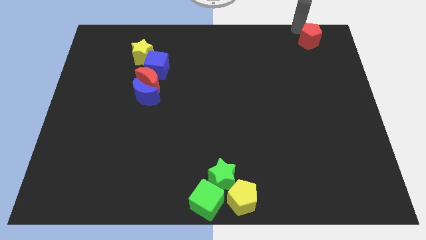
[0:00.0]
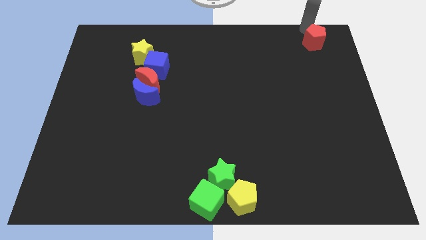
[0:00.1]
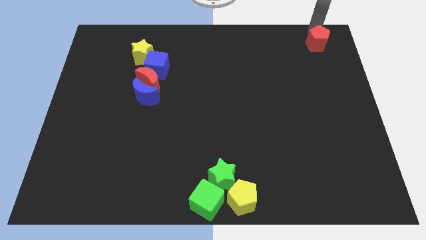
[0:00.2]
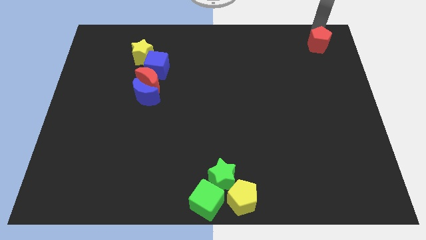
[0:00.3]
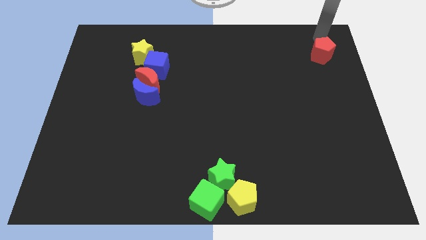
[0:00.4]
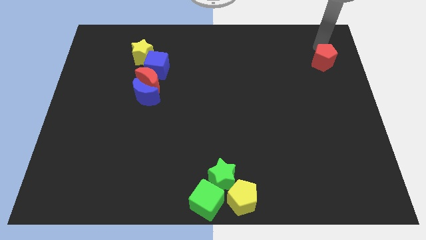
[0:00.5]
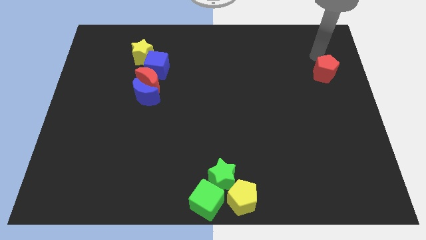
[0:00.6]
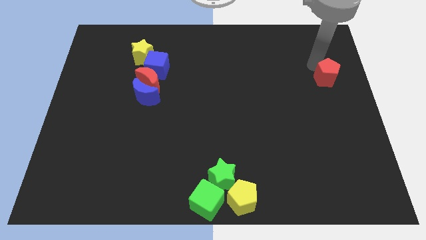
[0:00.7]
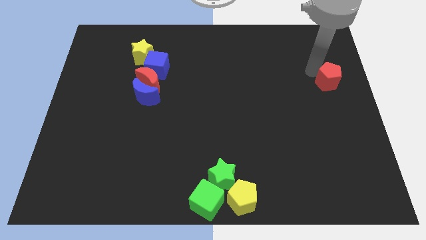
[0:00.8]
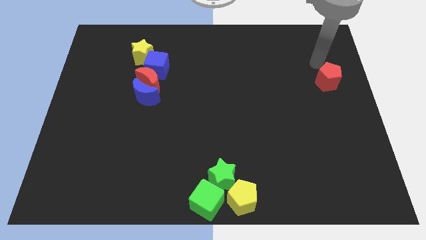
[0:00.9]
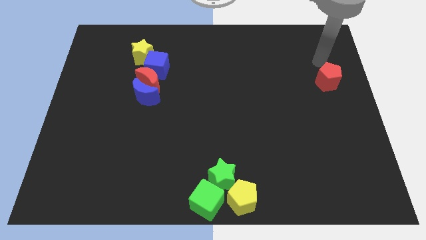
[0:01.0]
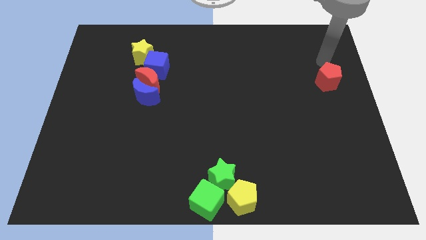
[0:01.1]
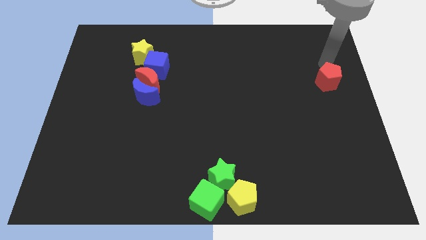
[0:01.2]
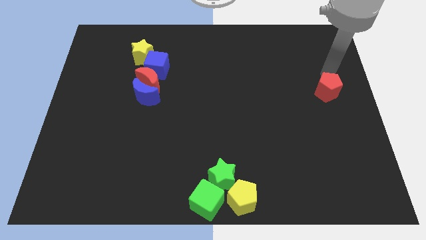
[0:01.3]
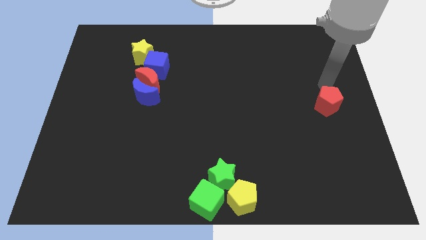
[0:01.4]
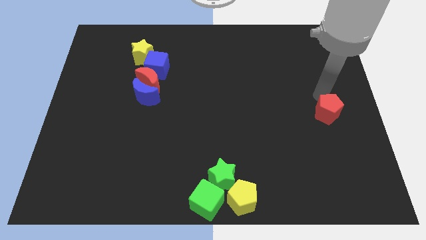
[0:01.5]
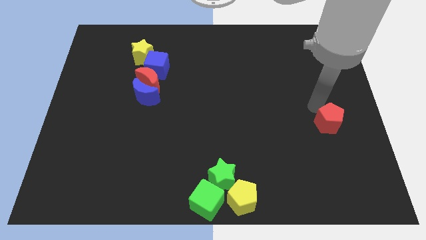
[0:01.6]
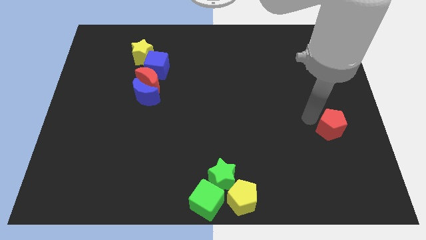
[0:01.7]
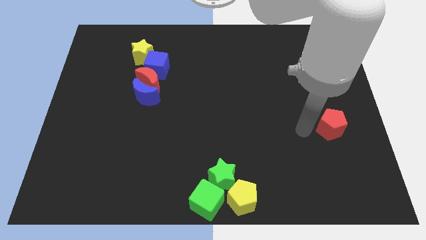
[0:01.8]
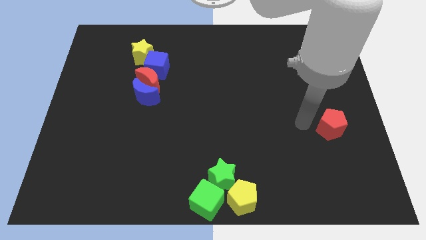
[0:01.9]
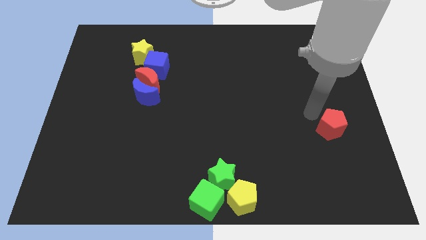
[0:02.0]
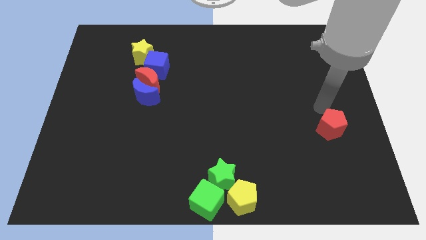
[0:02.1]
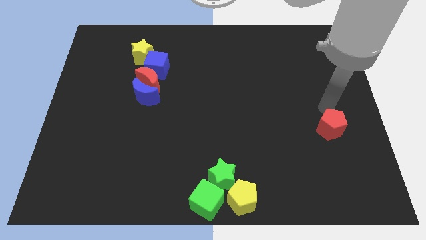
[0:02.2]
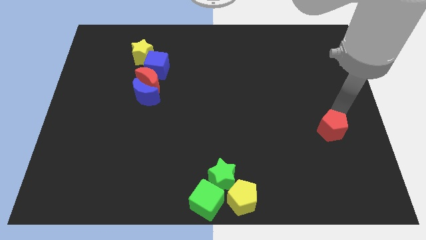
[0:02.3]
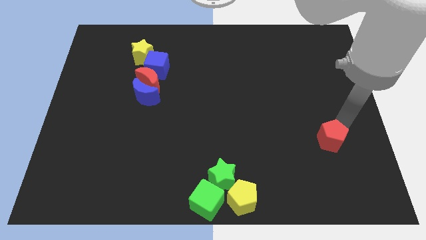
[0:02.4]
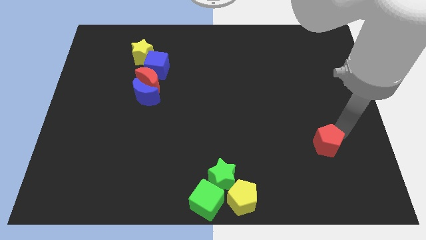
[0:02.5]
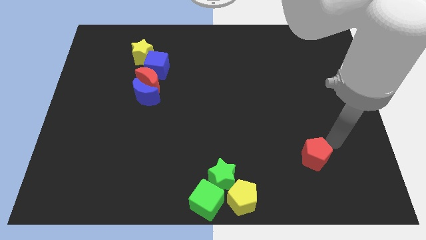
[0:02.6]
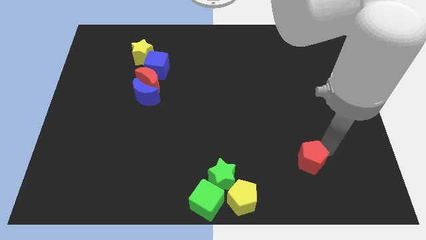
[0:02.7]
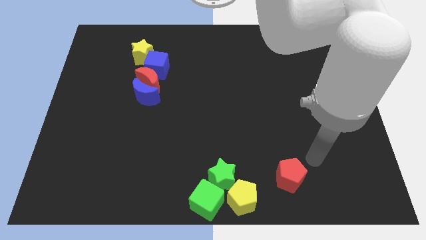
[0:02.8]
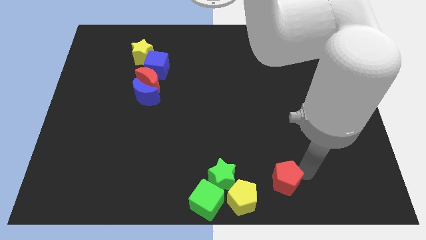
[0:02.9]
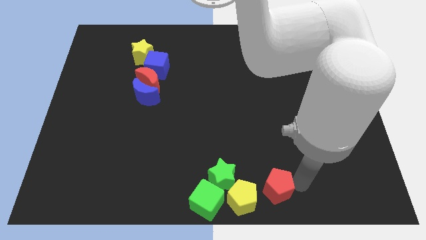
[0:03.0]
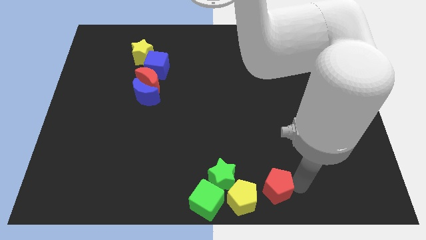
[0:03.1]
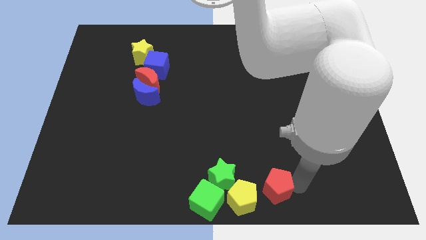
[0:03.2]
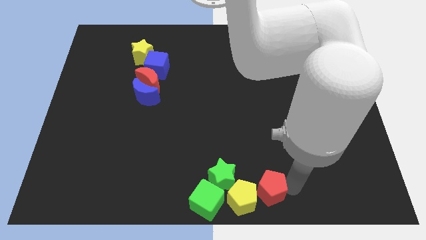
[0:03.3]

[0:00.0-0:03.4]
move the red pentagon towards the bottom center of the board

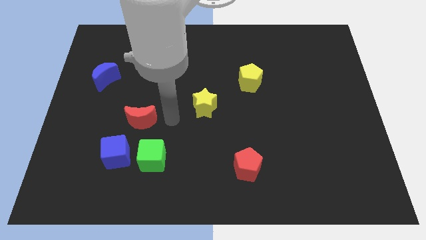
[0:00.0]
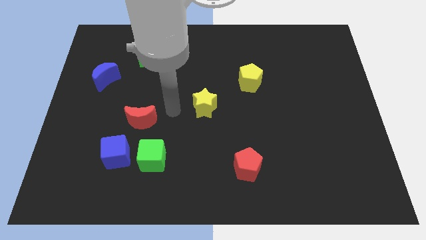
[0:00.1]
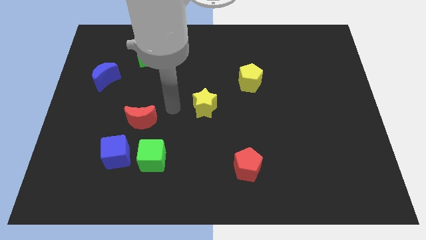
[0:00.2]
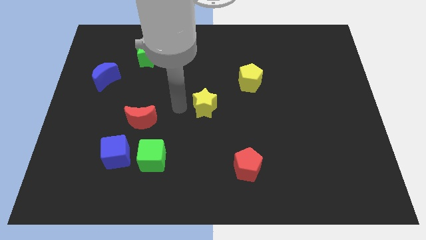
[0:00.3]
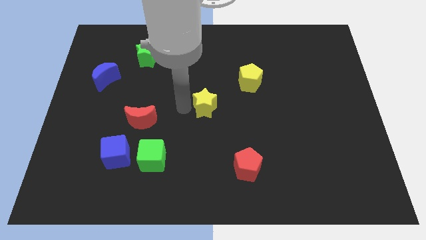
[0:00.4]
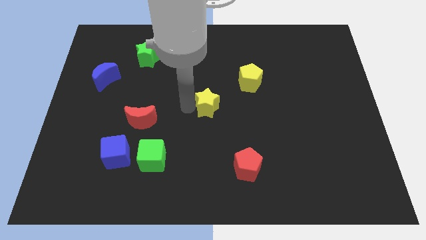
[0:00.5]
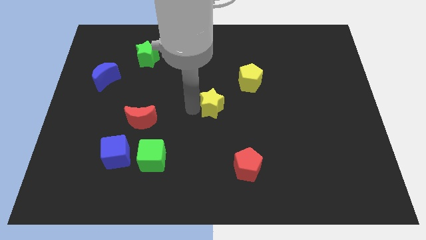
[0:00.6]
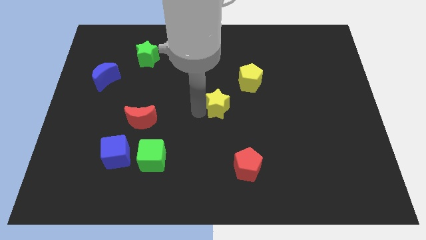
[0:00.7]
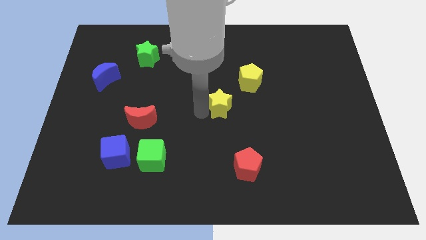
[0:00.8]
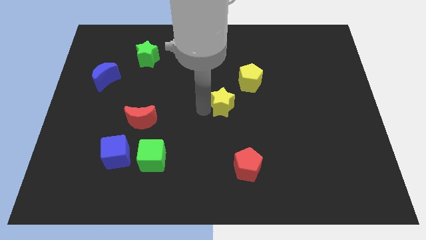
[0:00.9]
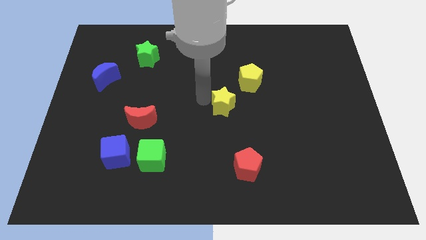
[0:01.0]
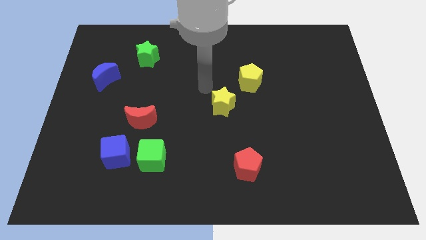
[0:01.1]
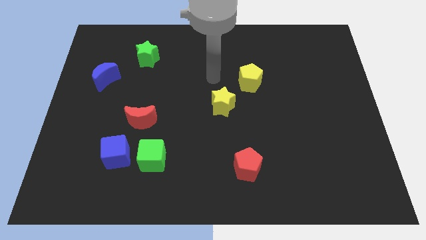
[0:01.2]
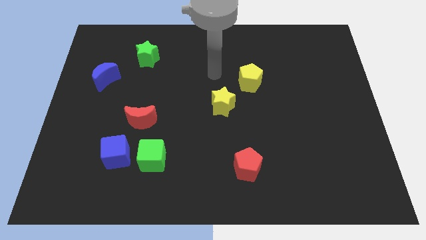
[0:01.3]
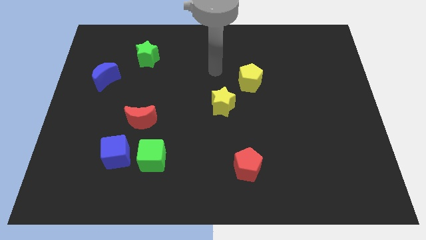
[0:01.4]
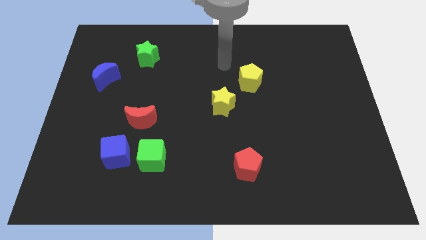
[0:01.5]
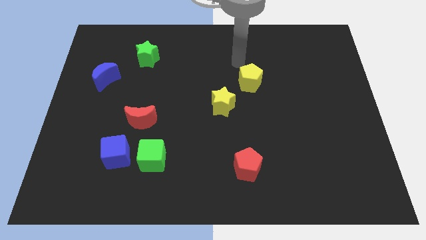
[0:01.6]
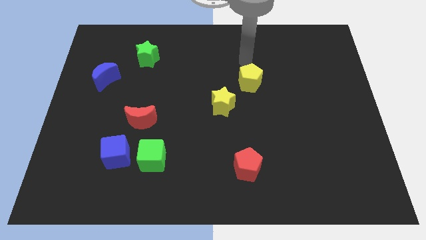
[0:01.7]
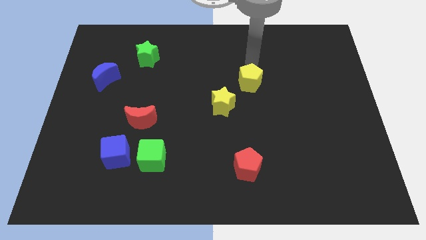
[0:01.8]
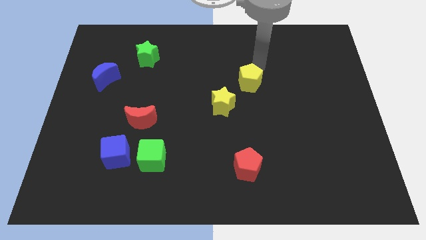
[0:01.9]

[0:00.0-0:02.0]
move the yellow star slightly to the right

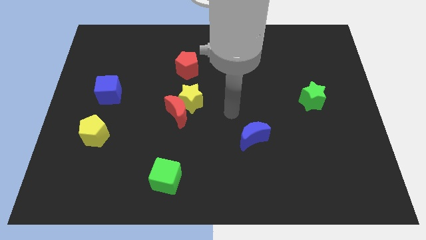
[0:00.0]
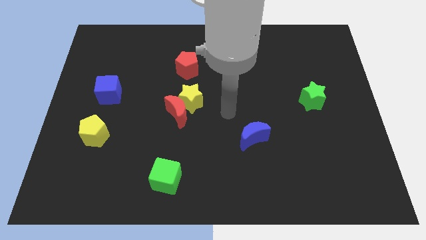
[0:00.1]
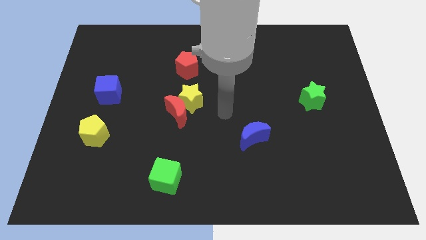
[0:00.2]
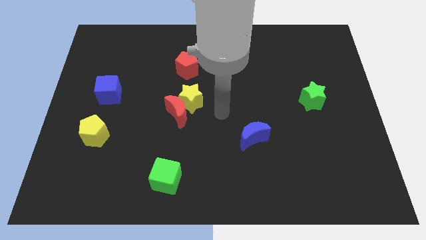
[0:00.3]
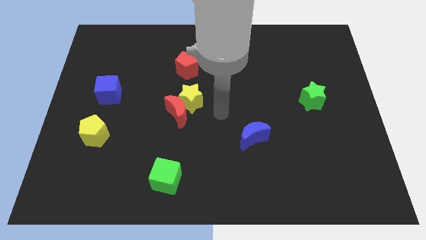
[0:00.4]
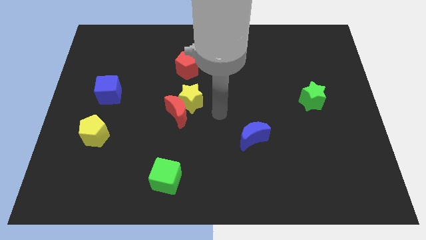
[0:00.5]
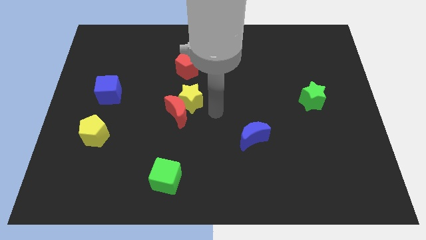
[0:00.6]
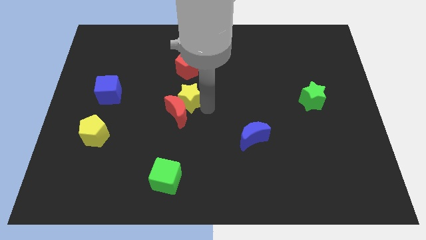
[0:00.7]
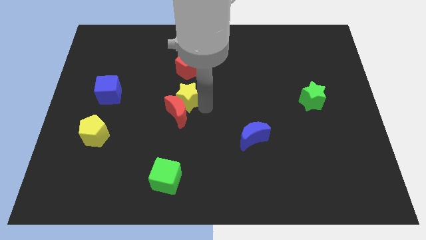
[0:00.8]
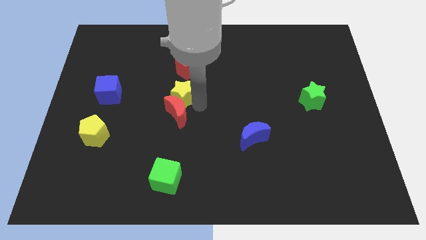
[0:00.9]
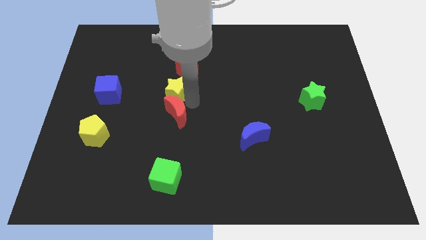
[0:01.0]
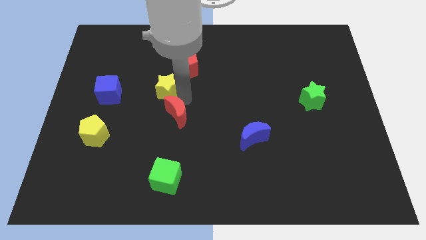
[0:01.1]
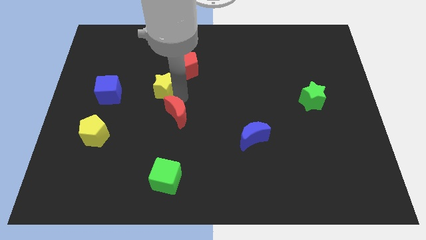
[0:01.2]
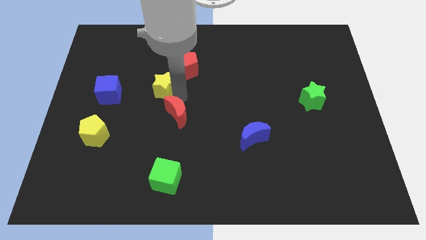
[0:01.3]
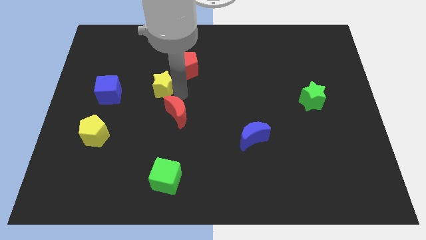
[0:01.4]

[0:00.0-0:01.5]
place the yellow star right to the blue cube

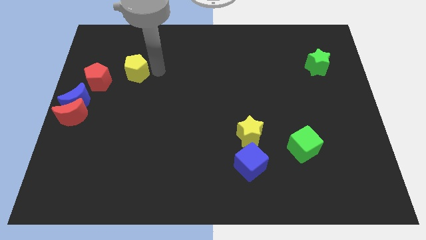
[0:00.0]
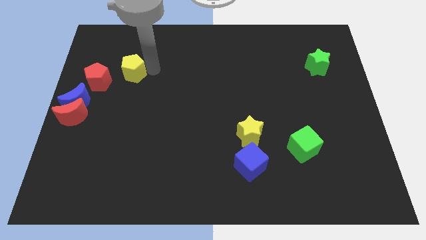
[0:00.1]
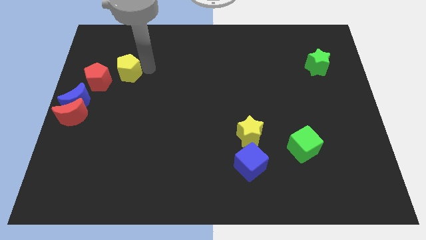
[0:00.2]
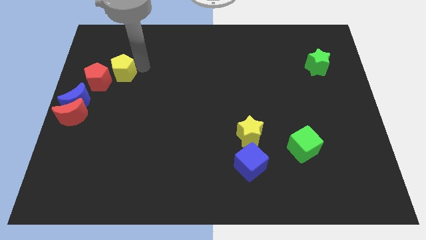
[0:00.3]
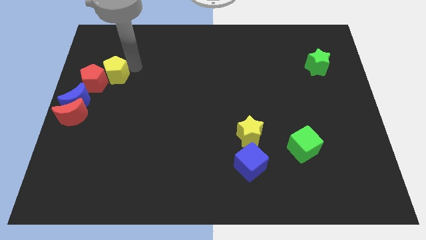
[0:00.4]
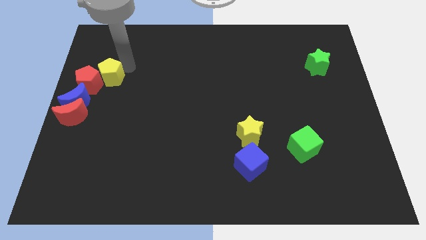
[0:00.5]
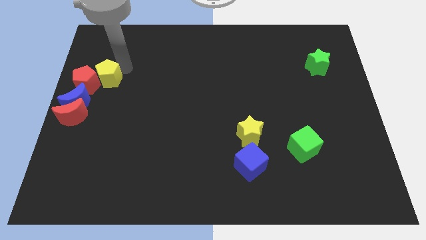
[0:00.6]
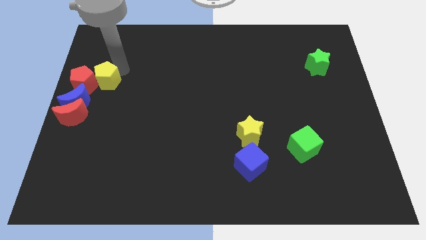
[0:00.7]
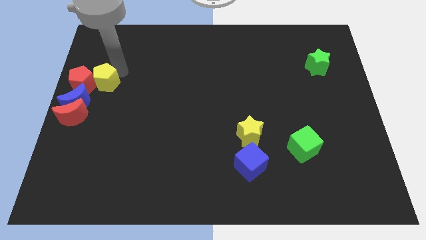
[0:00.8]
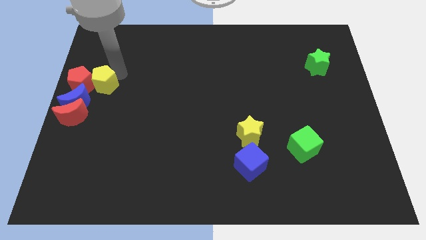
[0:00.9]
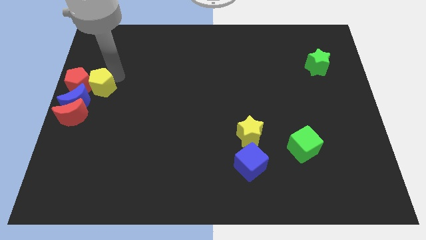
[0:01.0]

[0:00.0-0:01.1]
push the yellow pentagon into the red pentagon

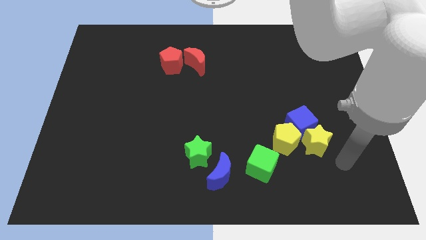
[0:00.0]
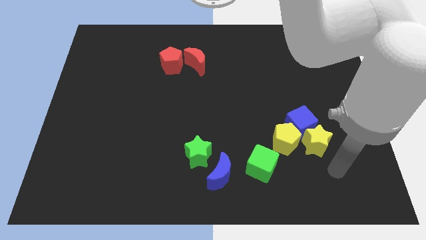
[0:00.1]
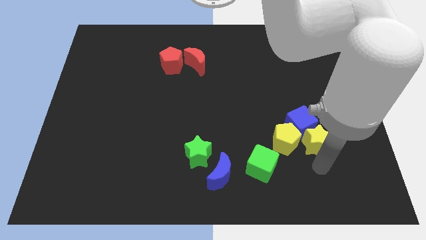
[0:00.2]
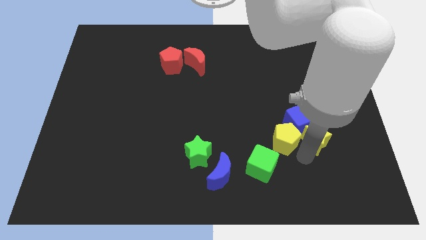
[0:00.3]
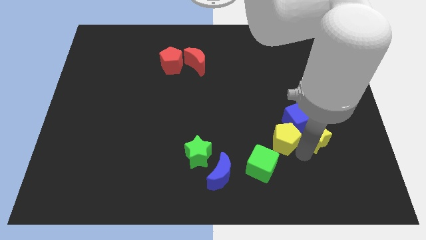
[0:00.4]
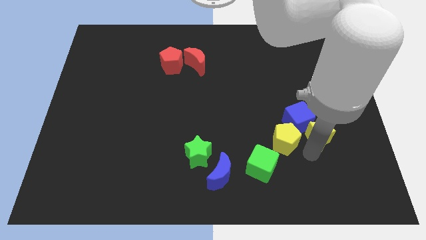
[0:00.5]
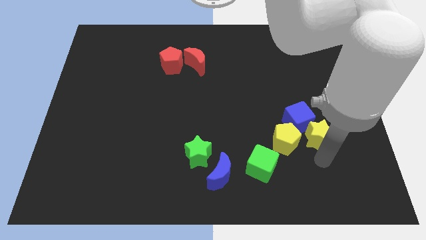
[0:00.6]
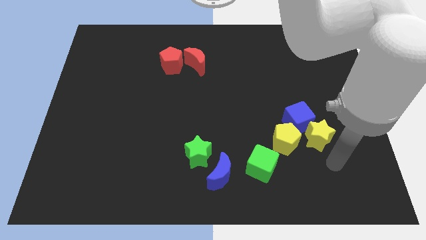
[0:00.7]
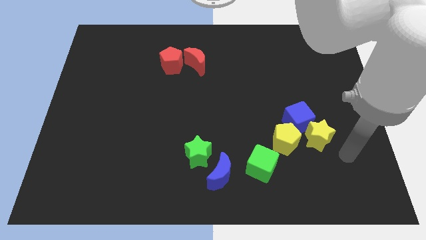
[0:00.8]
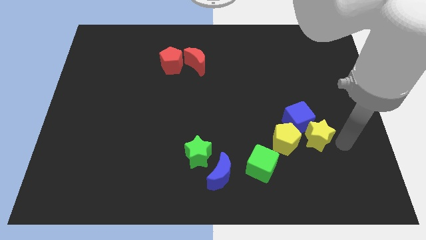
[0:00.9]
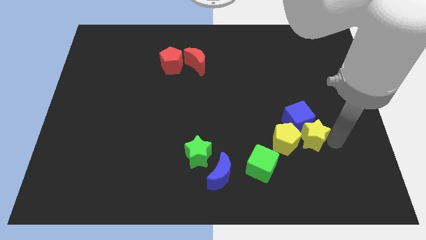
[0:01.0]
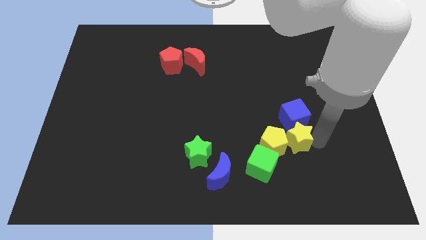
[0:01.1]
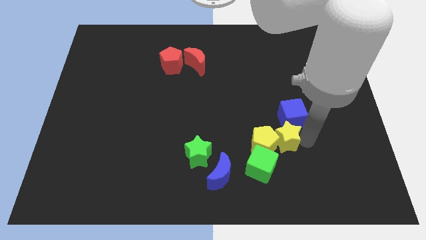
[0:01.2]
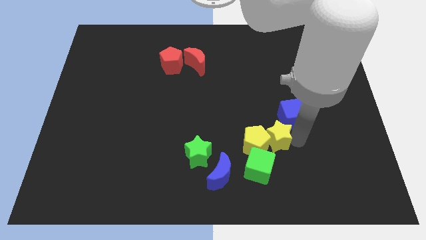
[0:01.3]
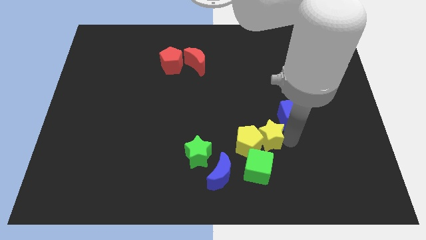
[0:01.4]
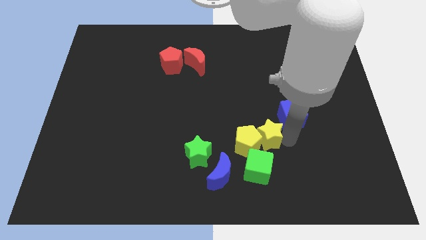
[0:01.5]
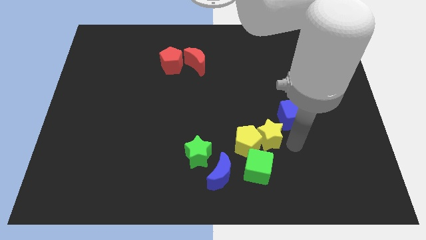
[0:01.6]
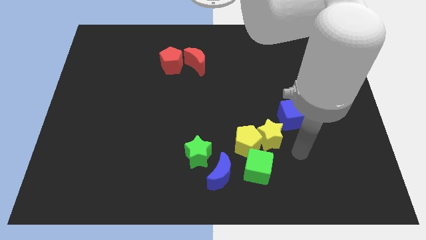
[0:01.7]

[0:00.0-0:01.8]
push the yellow star close to yellow pentagon
